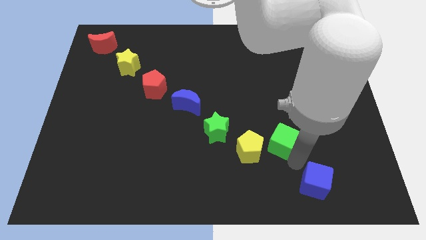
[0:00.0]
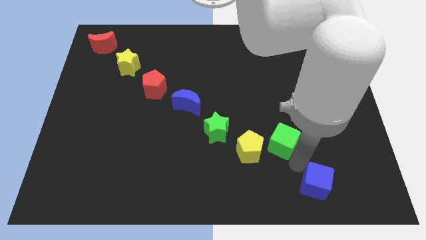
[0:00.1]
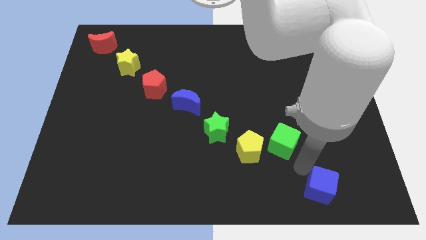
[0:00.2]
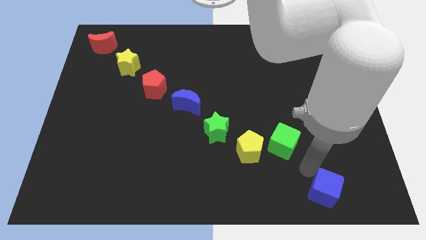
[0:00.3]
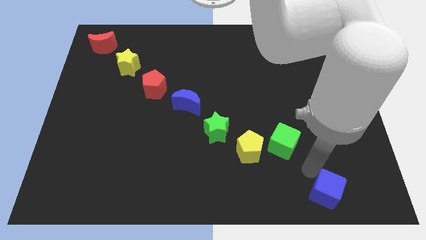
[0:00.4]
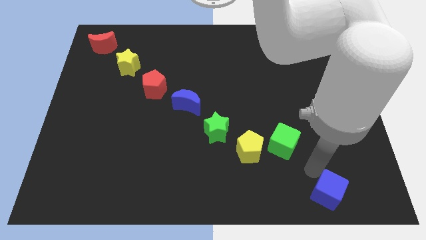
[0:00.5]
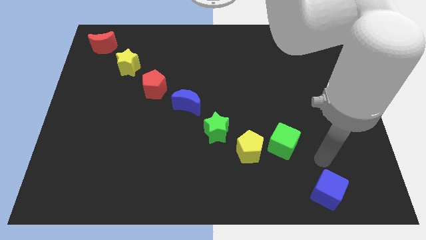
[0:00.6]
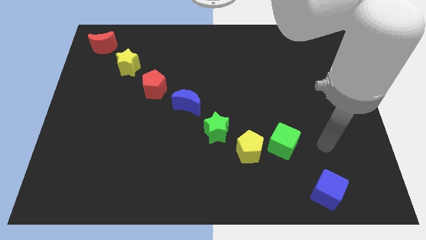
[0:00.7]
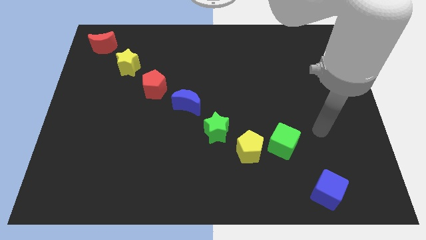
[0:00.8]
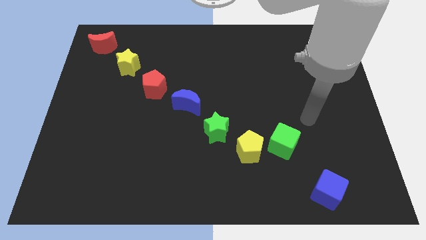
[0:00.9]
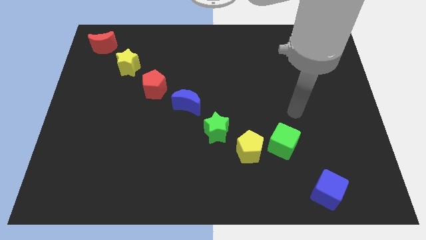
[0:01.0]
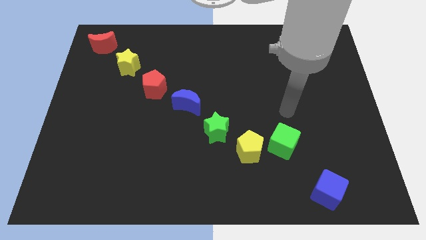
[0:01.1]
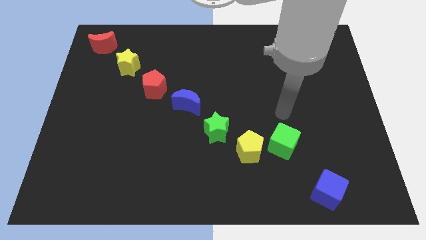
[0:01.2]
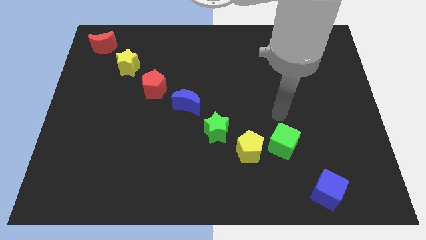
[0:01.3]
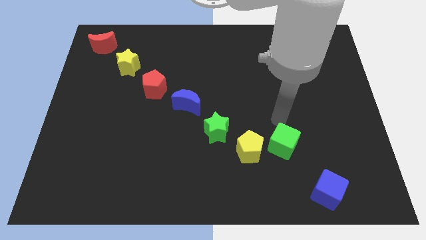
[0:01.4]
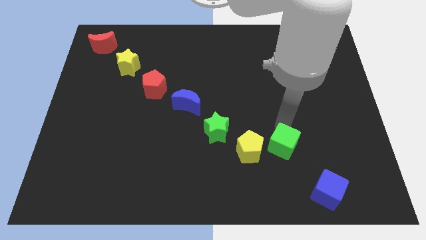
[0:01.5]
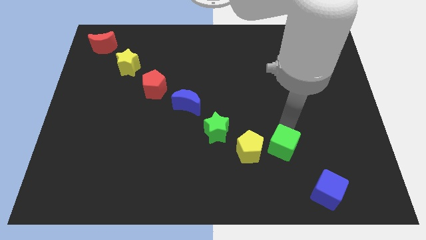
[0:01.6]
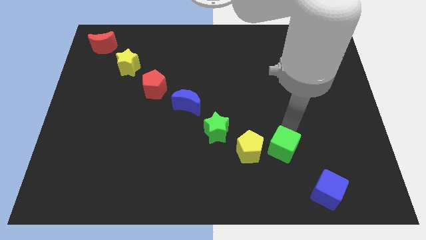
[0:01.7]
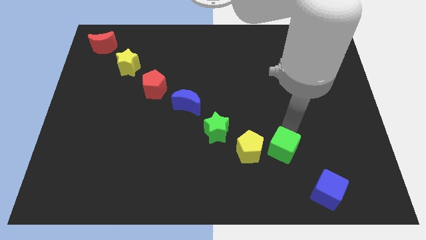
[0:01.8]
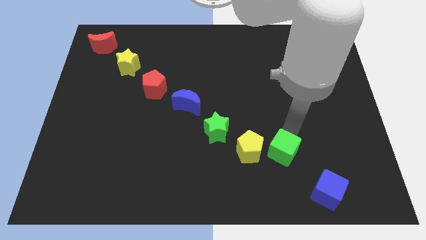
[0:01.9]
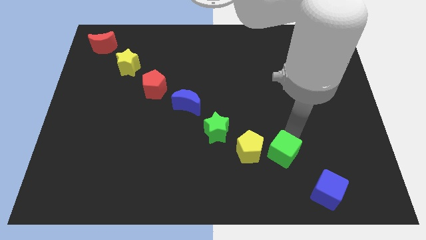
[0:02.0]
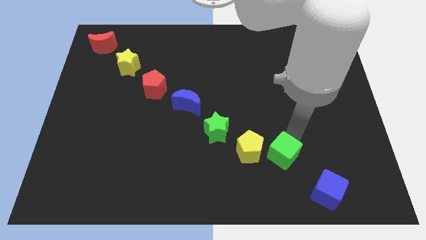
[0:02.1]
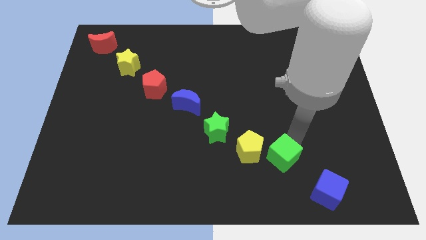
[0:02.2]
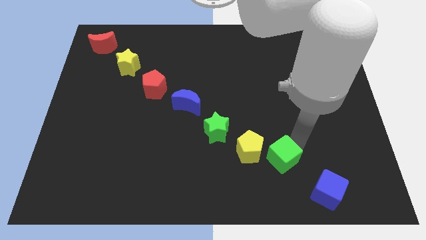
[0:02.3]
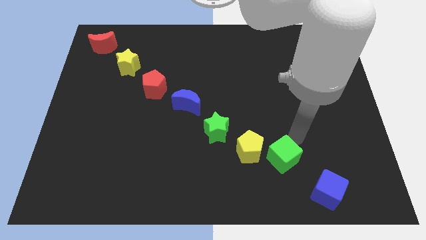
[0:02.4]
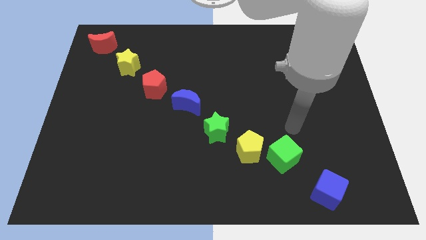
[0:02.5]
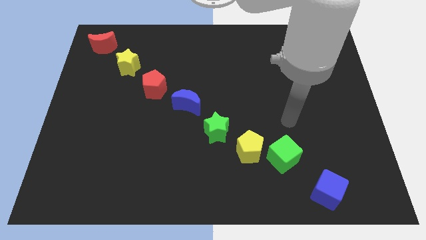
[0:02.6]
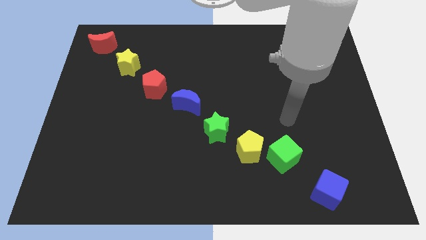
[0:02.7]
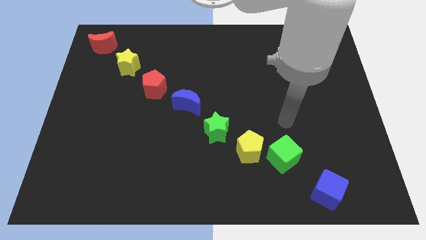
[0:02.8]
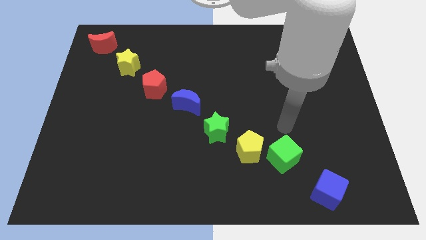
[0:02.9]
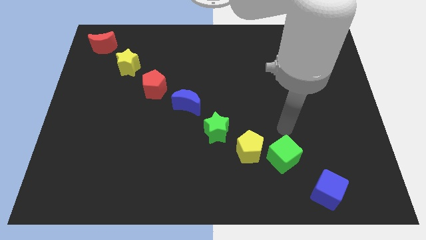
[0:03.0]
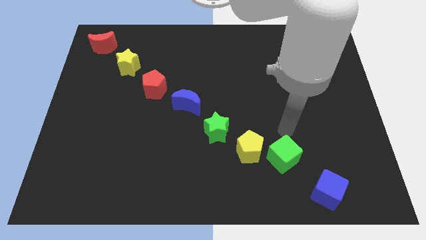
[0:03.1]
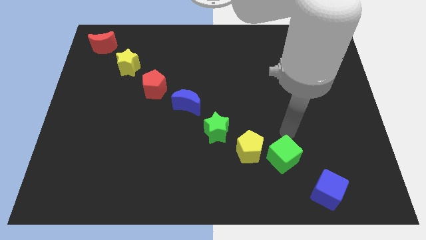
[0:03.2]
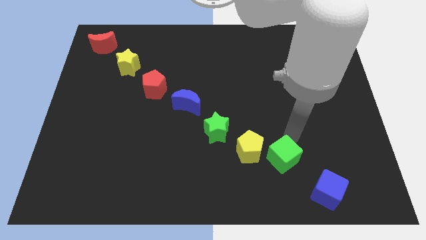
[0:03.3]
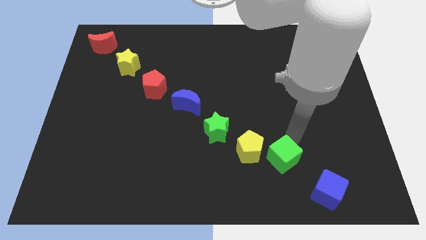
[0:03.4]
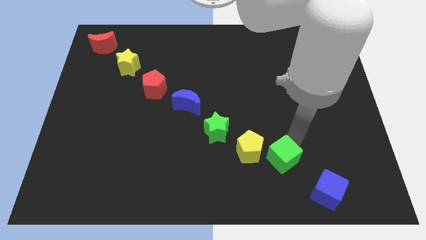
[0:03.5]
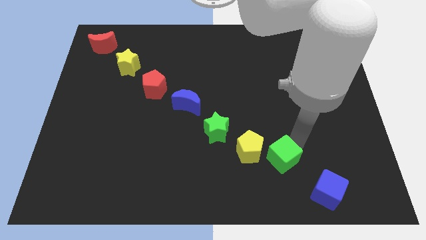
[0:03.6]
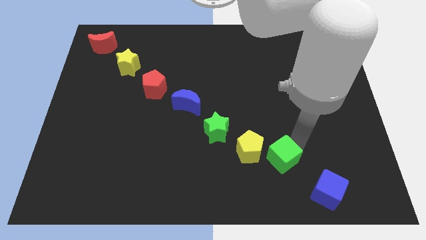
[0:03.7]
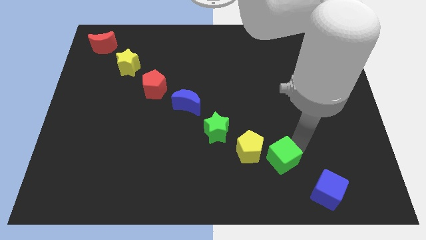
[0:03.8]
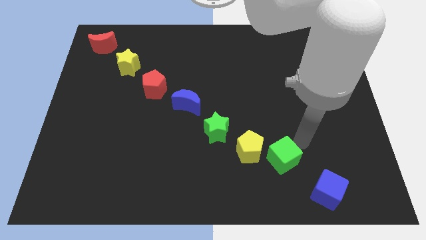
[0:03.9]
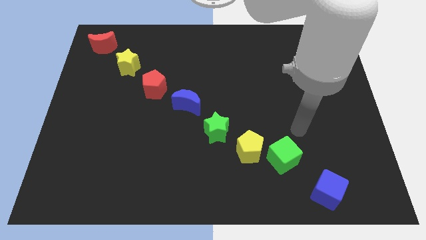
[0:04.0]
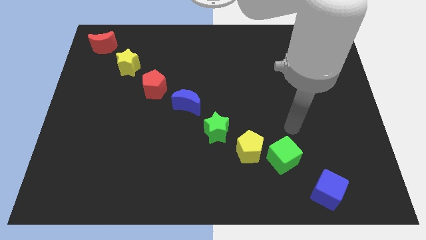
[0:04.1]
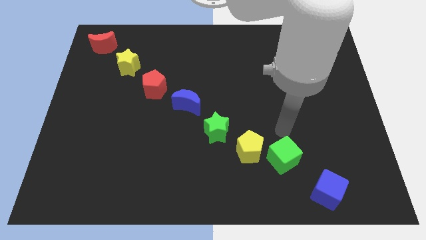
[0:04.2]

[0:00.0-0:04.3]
adjust the cubes diagonally with group of blocks

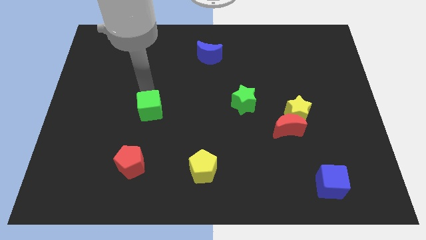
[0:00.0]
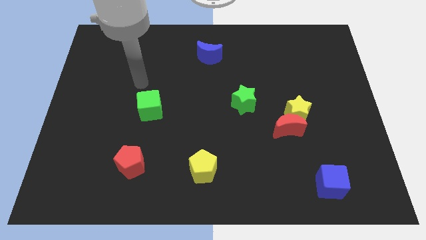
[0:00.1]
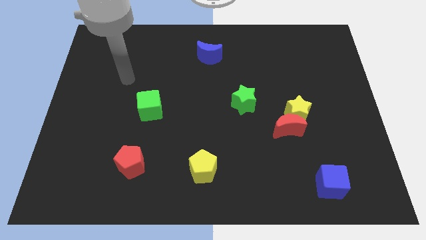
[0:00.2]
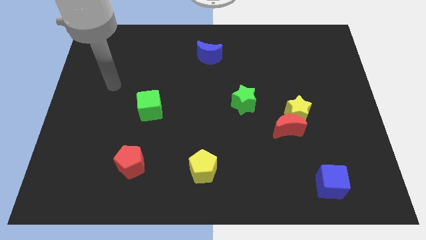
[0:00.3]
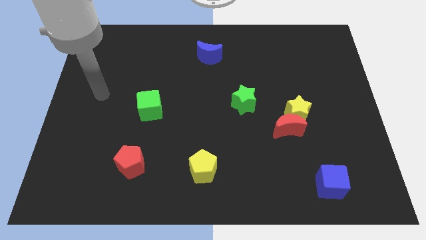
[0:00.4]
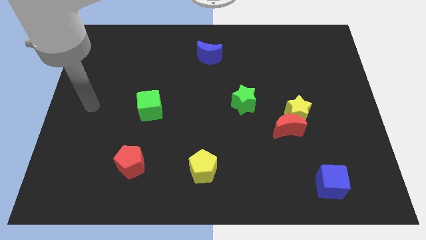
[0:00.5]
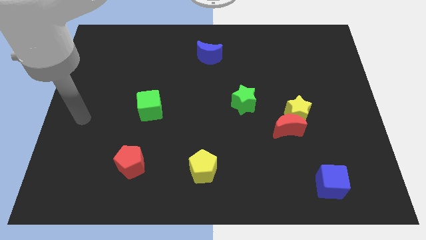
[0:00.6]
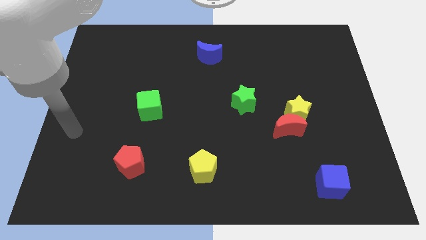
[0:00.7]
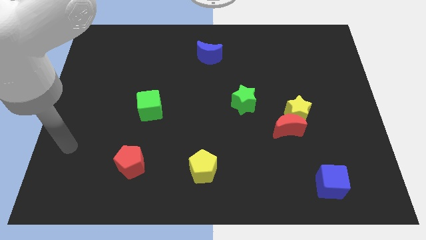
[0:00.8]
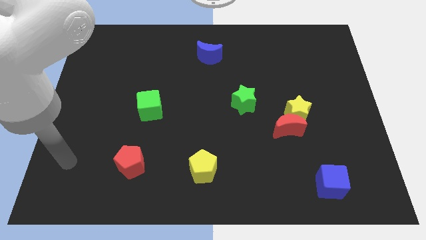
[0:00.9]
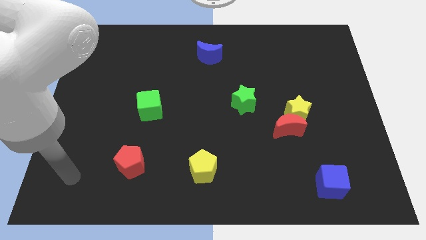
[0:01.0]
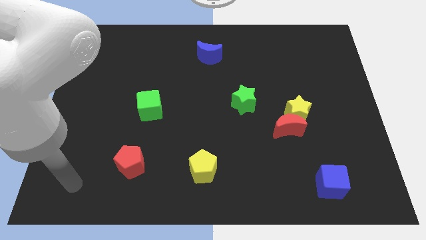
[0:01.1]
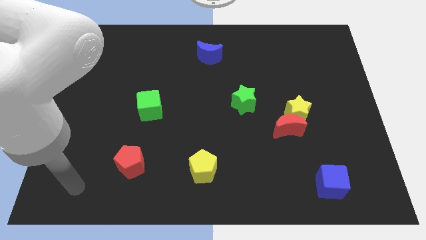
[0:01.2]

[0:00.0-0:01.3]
move your arm away from the green cube

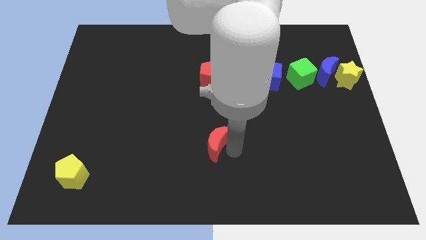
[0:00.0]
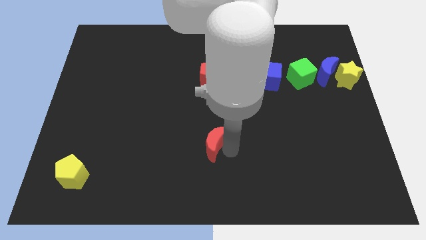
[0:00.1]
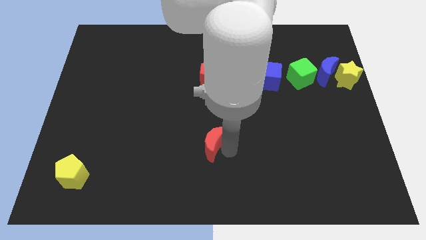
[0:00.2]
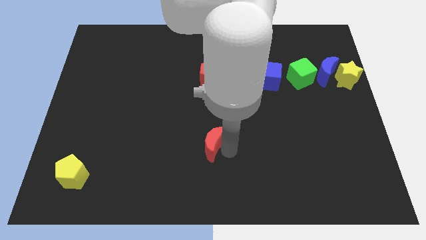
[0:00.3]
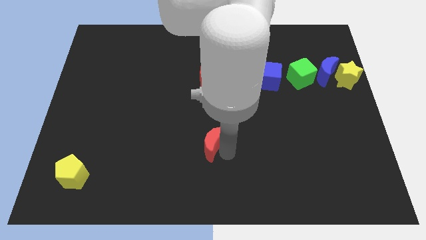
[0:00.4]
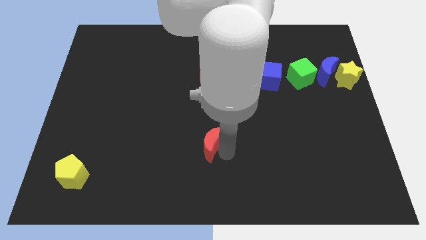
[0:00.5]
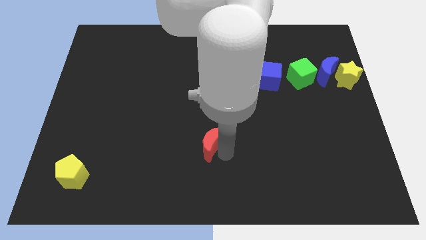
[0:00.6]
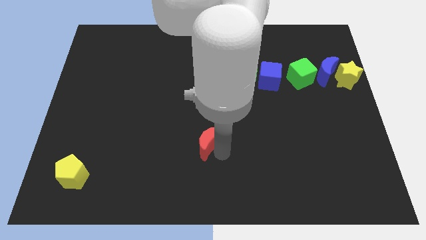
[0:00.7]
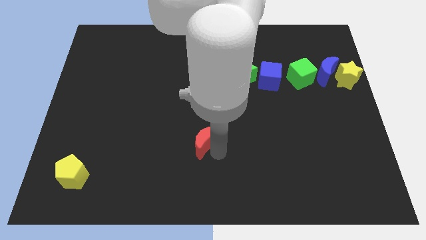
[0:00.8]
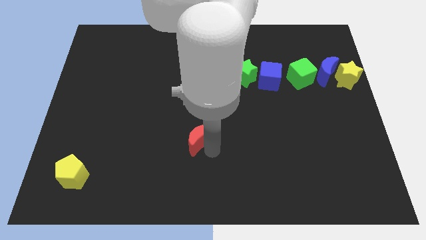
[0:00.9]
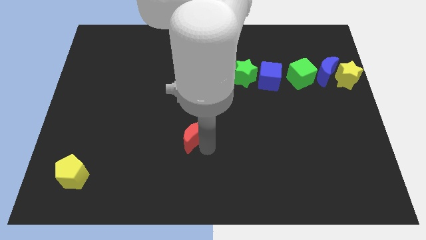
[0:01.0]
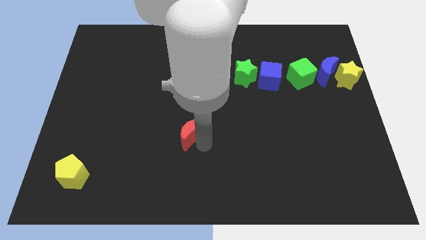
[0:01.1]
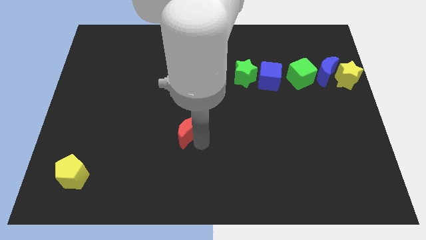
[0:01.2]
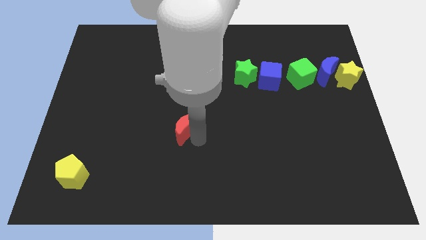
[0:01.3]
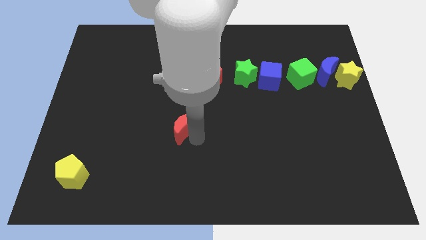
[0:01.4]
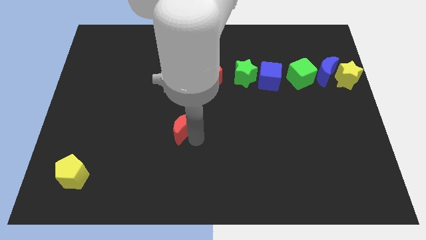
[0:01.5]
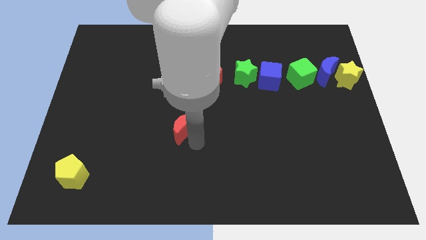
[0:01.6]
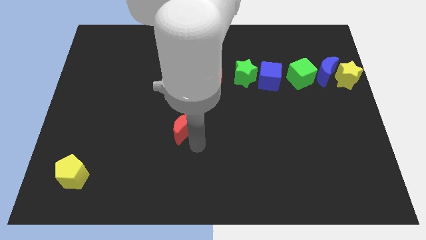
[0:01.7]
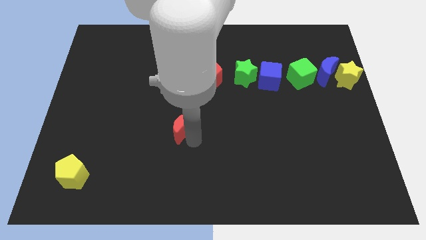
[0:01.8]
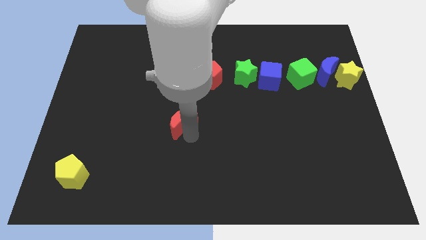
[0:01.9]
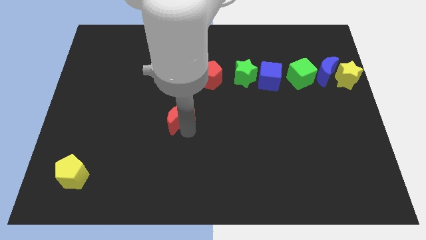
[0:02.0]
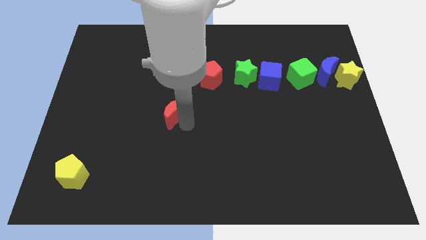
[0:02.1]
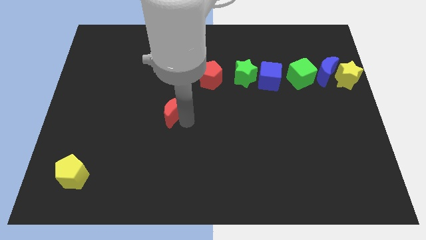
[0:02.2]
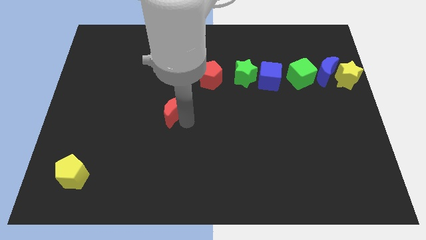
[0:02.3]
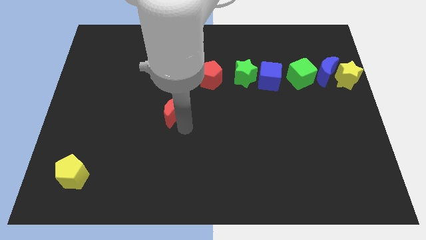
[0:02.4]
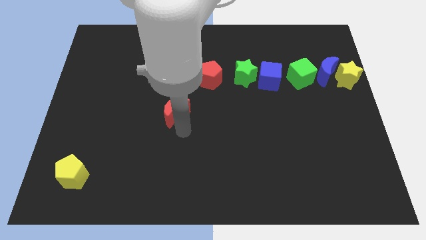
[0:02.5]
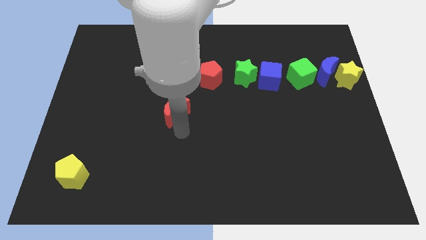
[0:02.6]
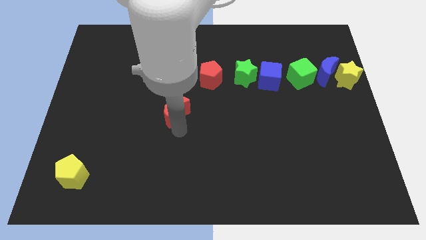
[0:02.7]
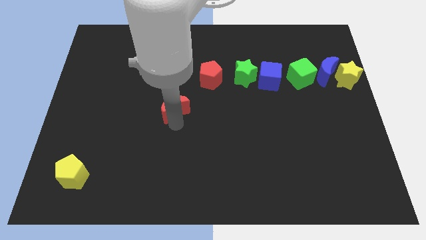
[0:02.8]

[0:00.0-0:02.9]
move the red crescent to the bottom left of the red pentagon

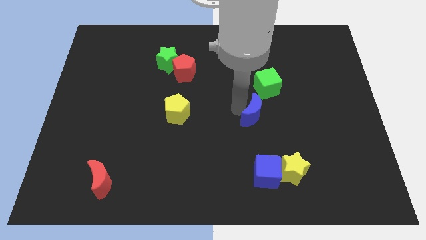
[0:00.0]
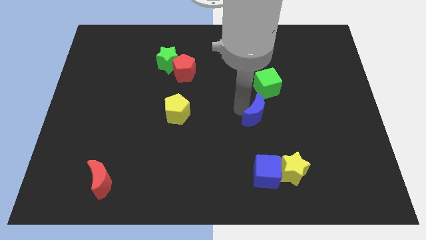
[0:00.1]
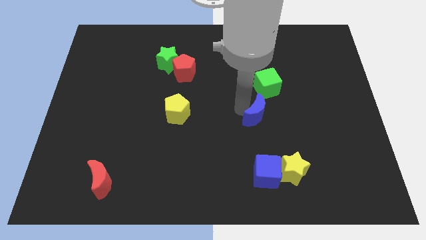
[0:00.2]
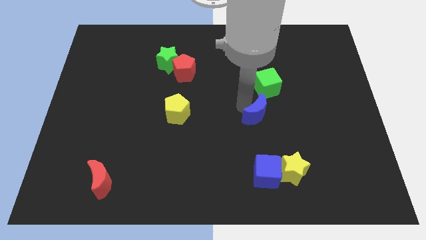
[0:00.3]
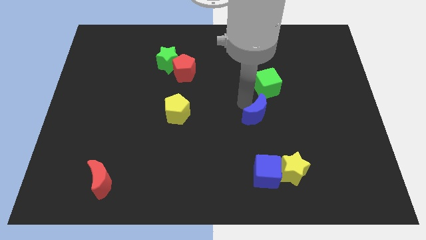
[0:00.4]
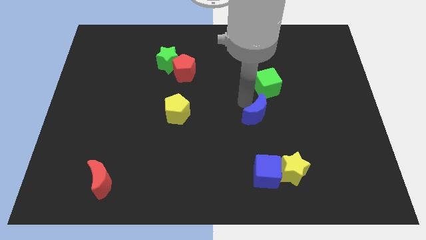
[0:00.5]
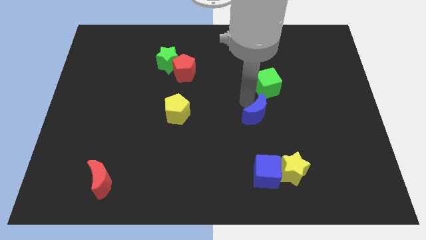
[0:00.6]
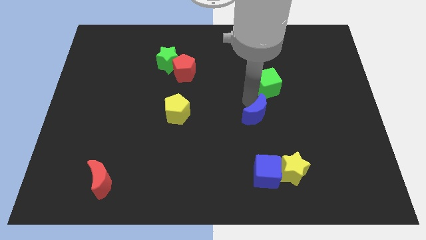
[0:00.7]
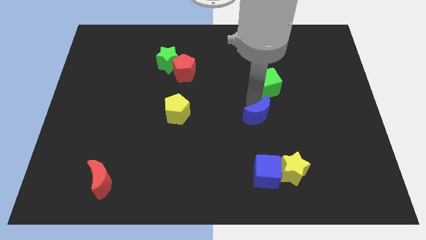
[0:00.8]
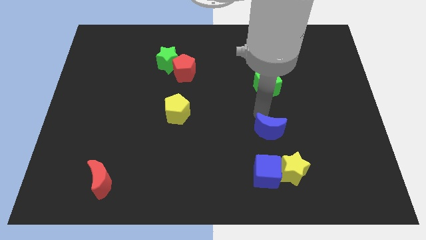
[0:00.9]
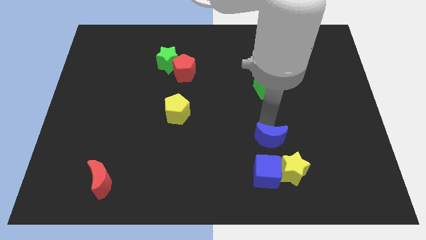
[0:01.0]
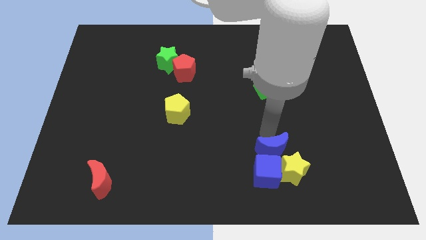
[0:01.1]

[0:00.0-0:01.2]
separate the green cube and blue moon
